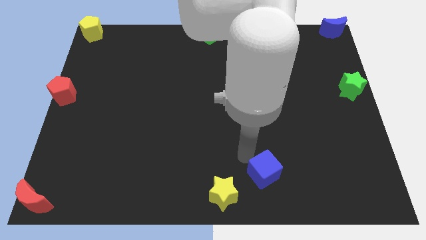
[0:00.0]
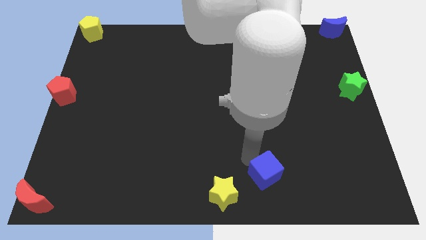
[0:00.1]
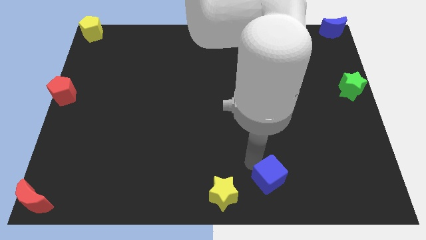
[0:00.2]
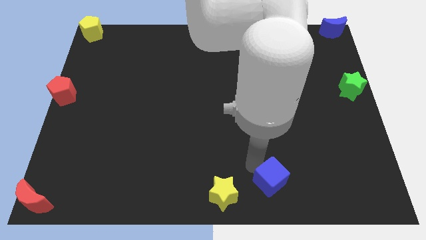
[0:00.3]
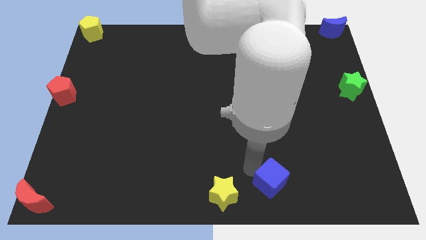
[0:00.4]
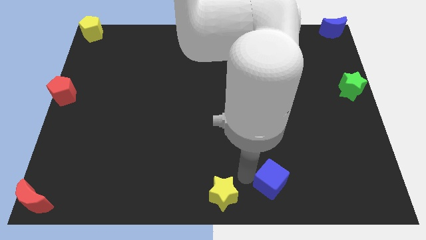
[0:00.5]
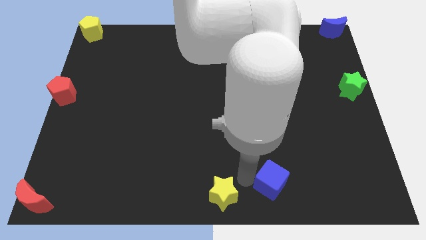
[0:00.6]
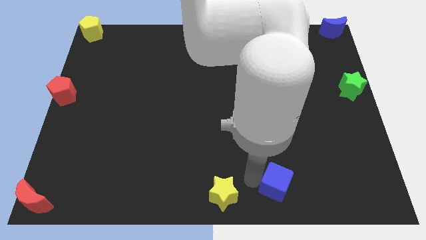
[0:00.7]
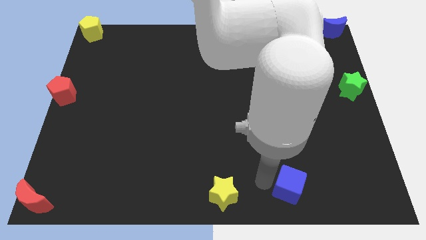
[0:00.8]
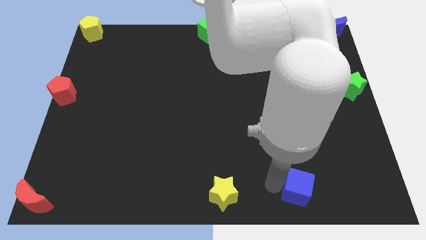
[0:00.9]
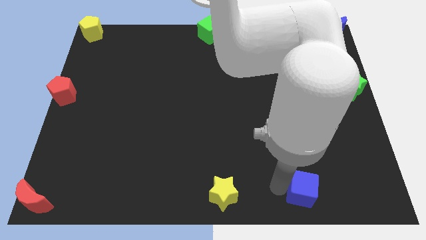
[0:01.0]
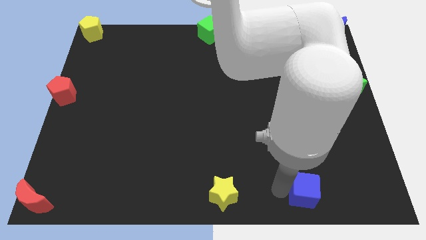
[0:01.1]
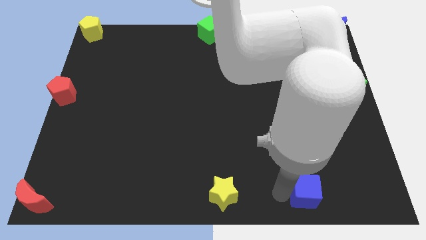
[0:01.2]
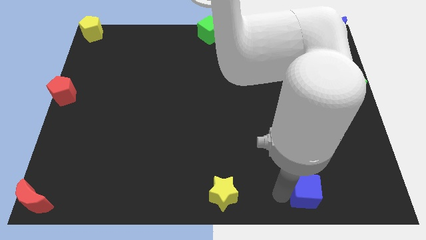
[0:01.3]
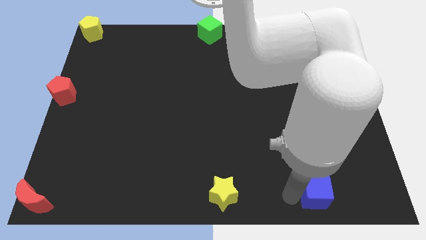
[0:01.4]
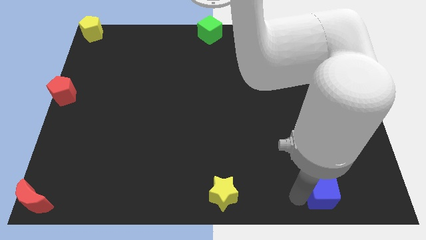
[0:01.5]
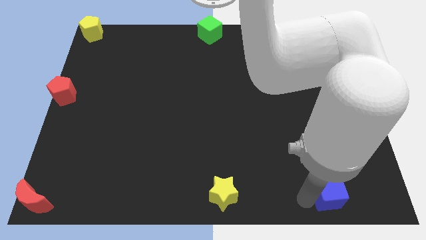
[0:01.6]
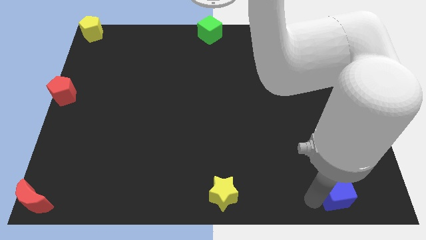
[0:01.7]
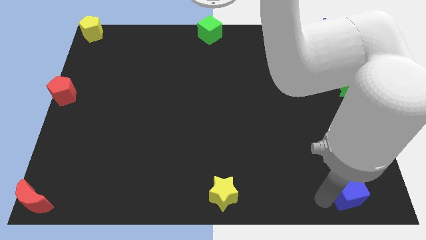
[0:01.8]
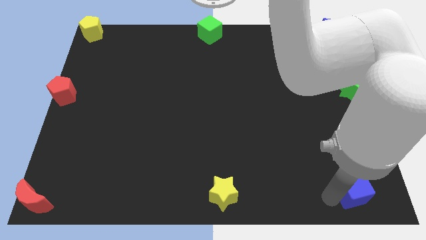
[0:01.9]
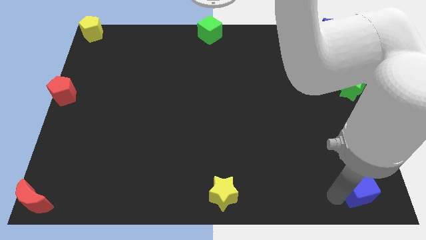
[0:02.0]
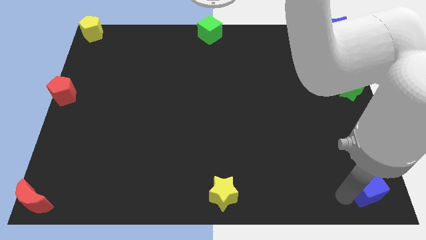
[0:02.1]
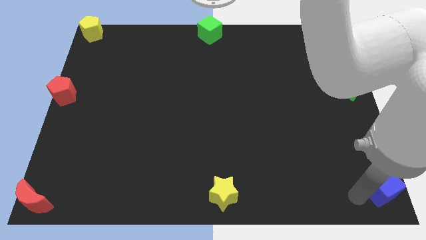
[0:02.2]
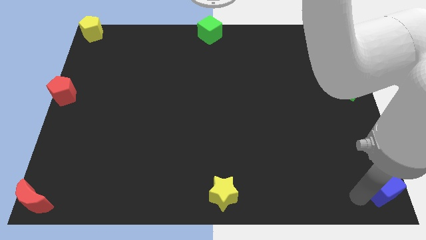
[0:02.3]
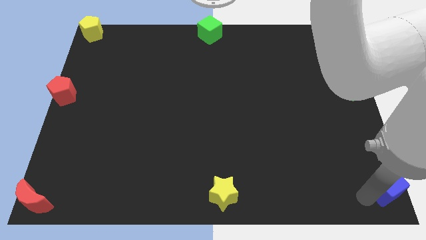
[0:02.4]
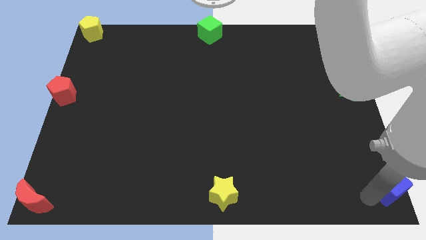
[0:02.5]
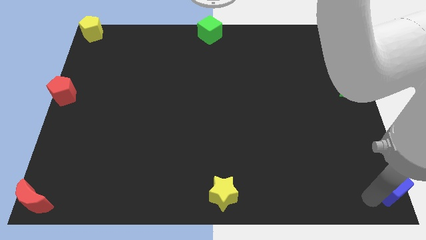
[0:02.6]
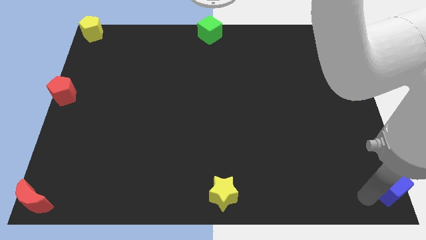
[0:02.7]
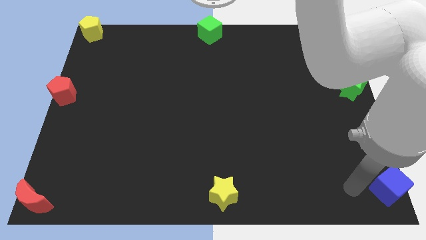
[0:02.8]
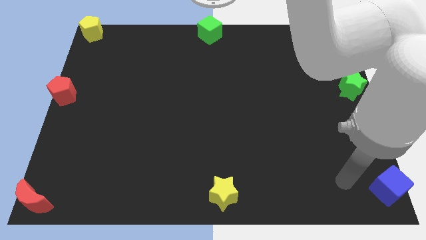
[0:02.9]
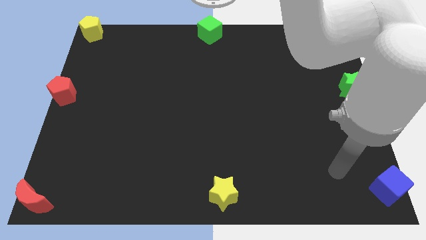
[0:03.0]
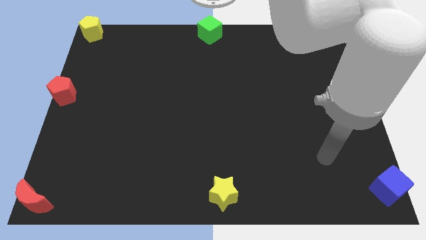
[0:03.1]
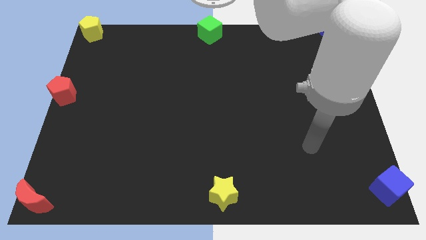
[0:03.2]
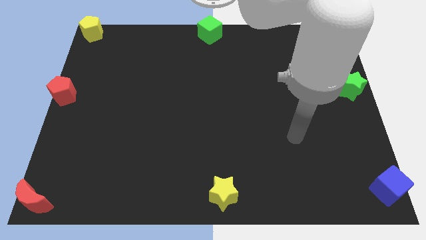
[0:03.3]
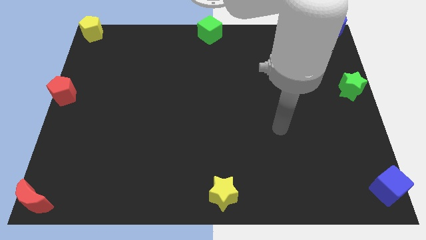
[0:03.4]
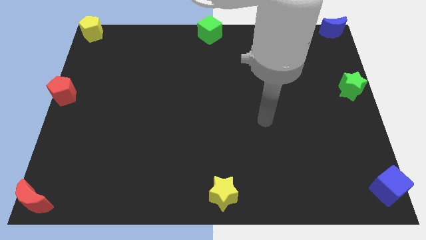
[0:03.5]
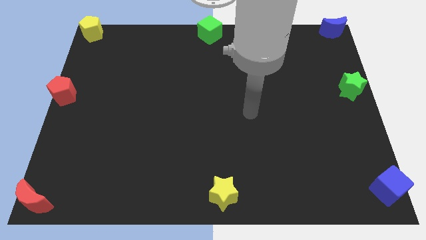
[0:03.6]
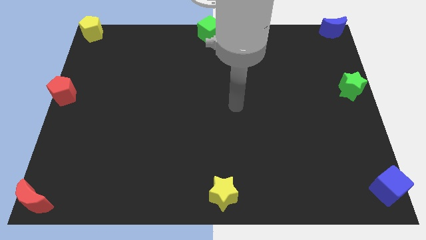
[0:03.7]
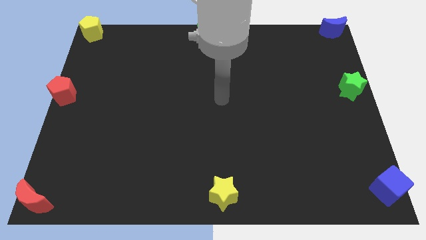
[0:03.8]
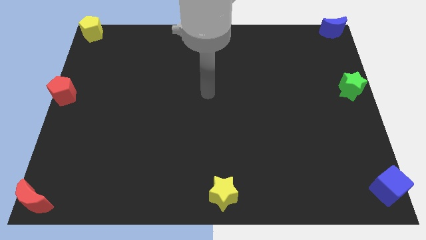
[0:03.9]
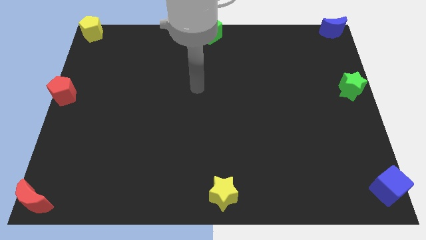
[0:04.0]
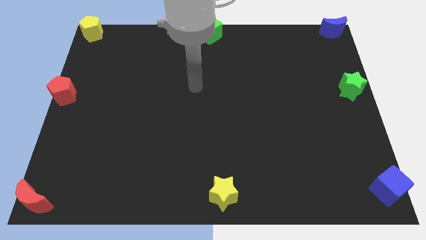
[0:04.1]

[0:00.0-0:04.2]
place the blue cube at the bottom right corner

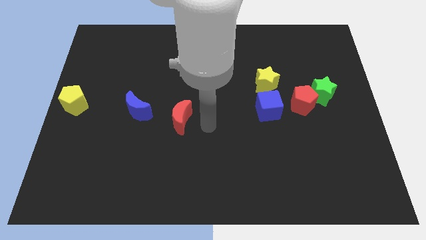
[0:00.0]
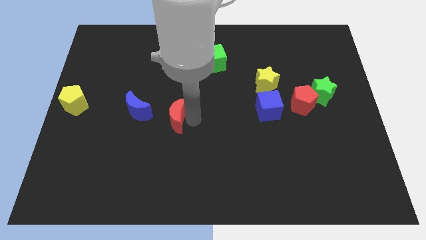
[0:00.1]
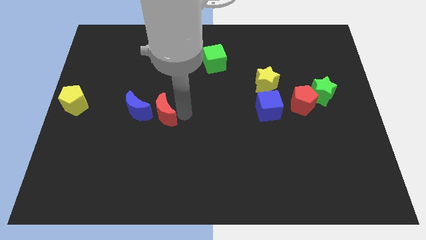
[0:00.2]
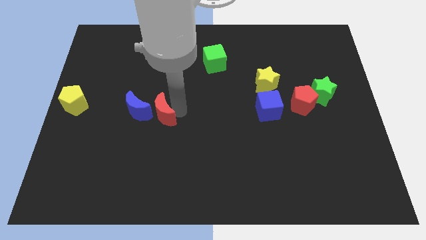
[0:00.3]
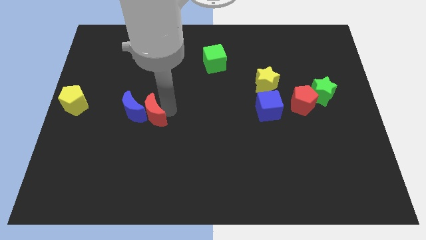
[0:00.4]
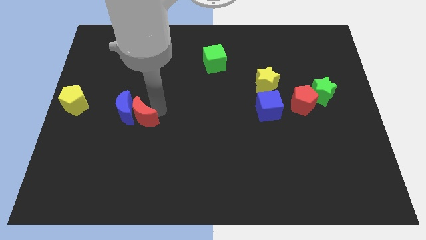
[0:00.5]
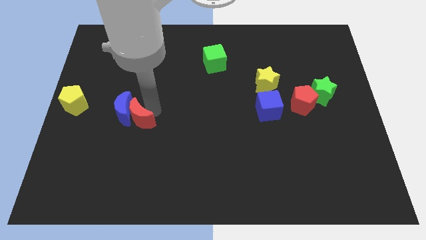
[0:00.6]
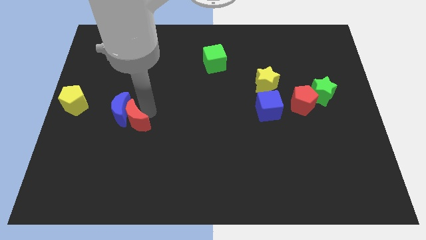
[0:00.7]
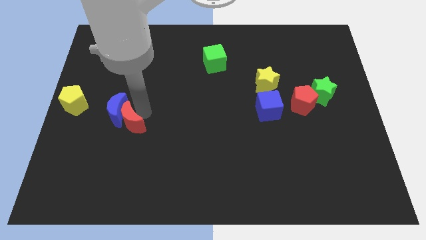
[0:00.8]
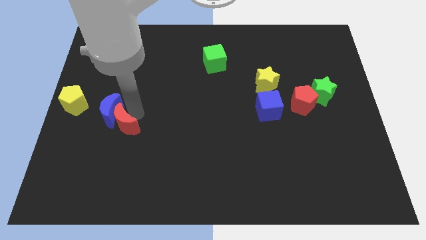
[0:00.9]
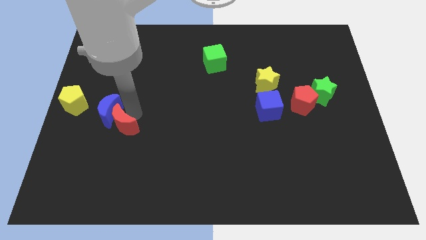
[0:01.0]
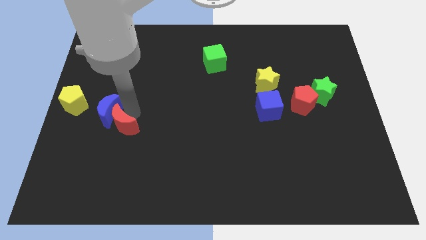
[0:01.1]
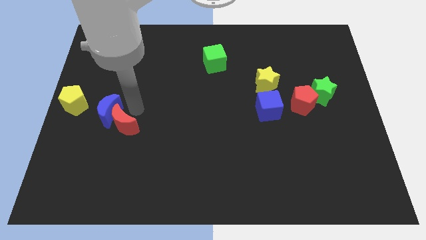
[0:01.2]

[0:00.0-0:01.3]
push the red crescent into the blue crescent

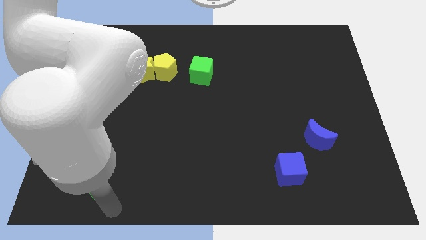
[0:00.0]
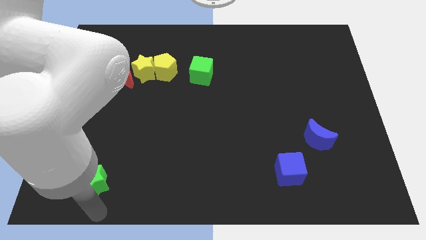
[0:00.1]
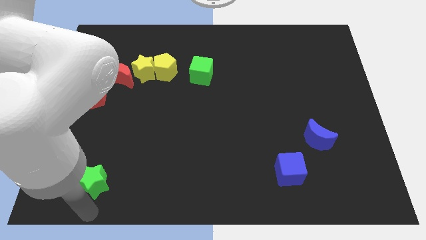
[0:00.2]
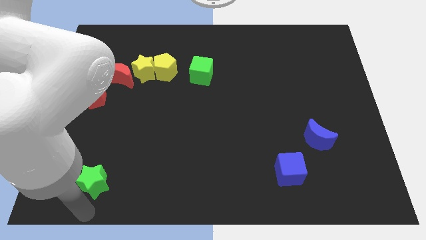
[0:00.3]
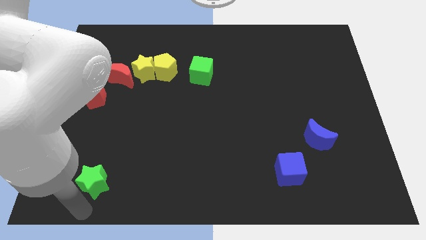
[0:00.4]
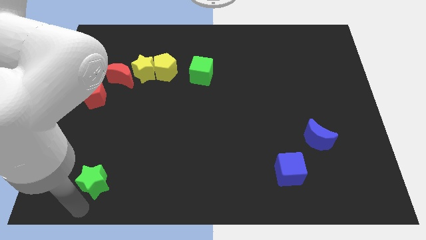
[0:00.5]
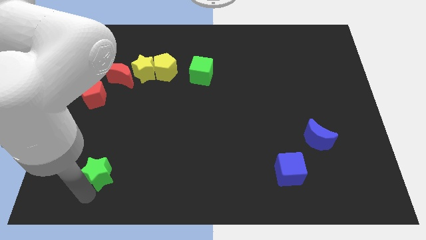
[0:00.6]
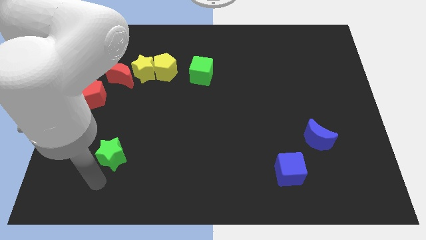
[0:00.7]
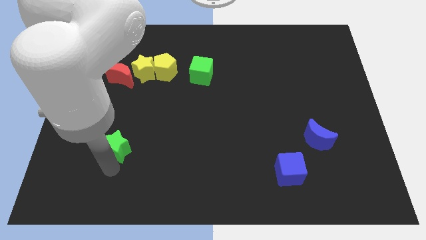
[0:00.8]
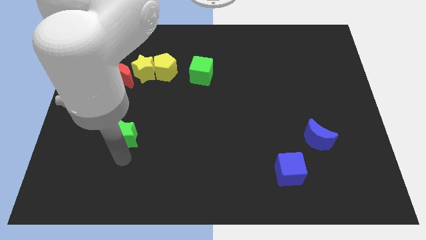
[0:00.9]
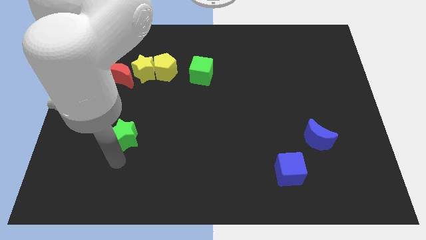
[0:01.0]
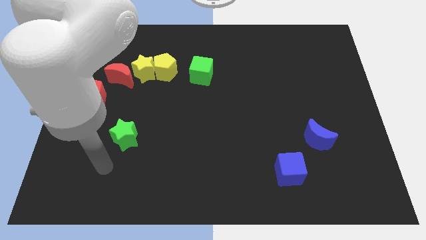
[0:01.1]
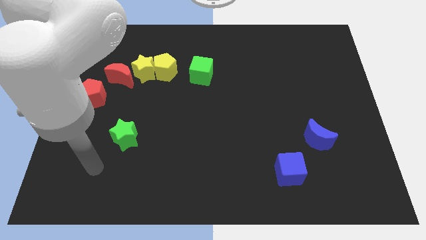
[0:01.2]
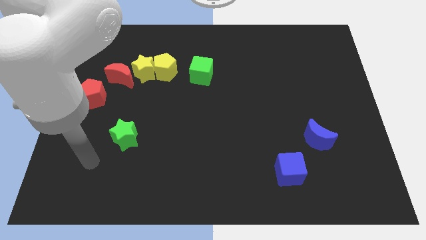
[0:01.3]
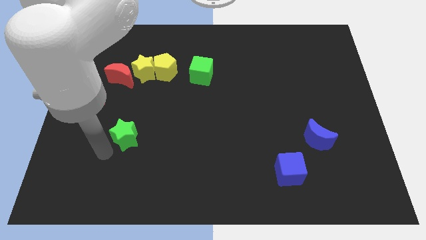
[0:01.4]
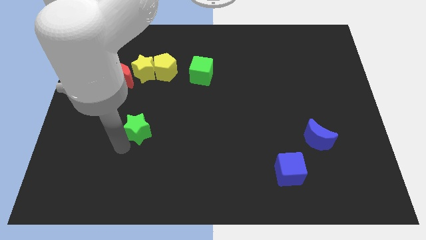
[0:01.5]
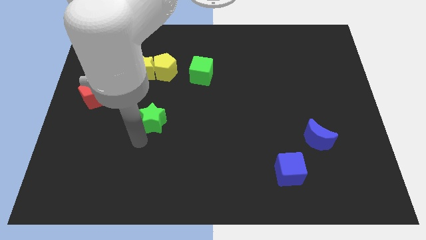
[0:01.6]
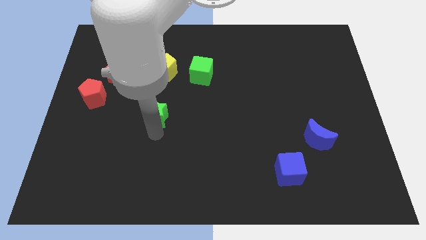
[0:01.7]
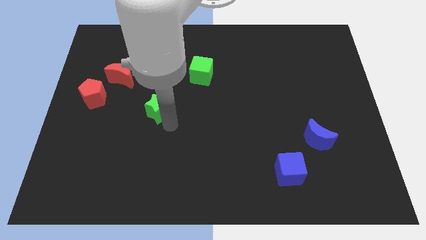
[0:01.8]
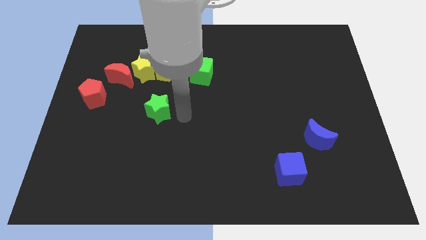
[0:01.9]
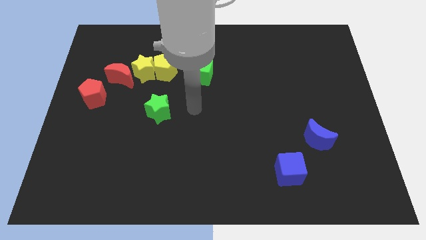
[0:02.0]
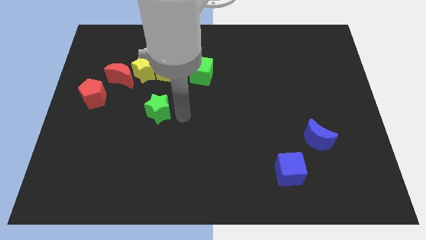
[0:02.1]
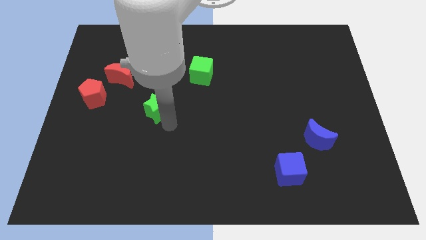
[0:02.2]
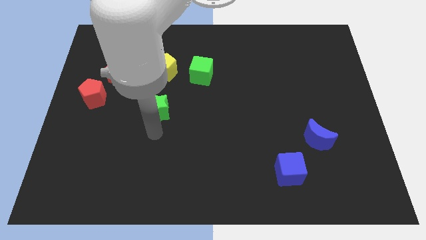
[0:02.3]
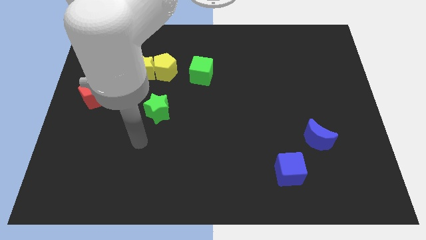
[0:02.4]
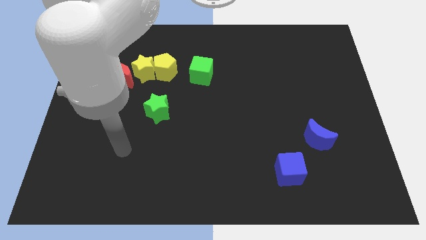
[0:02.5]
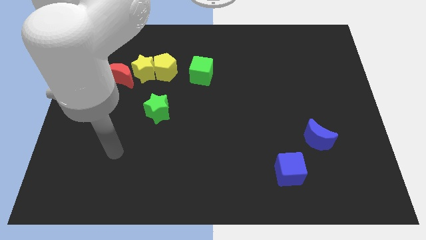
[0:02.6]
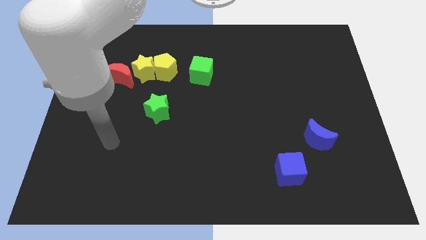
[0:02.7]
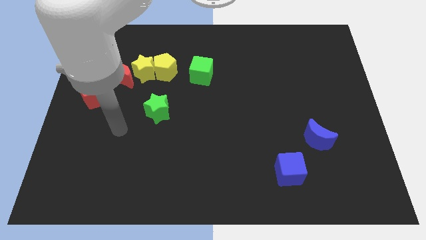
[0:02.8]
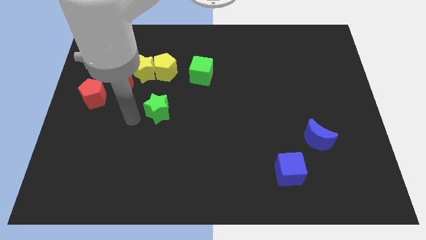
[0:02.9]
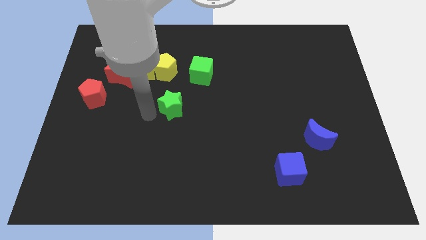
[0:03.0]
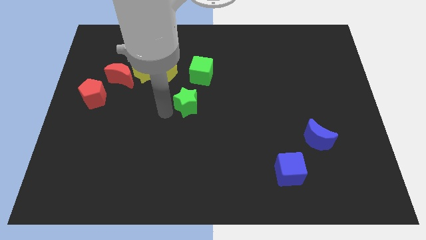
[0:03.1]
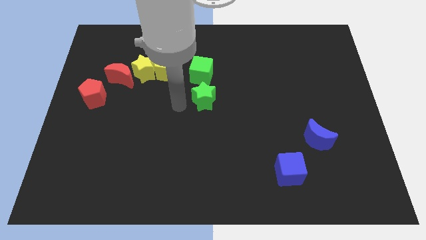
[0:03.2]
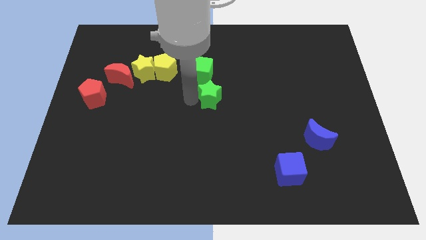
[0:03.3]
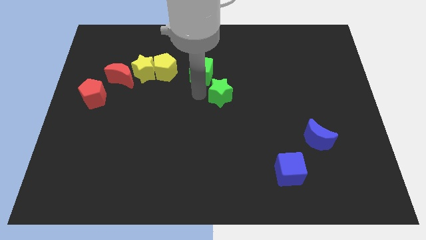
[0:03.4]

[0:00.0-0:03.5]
put the green star at the center of the board
